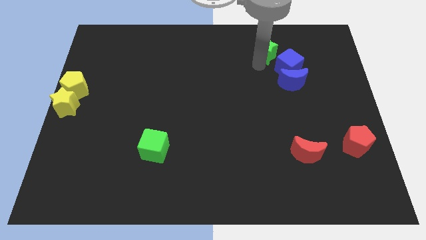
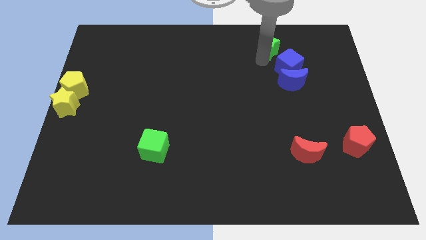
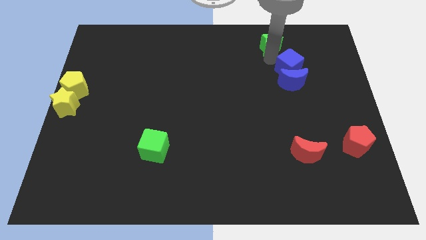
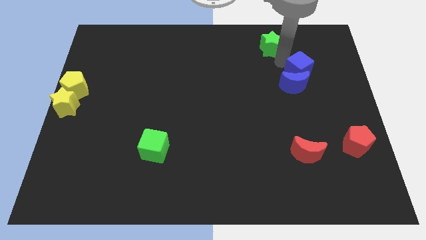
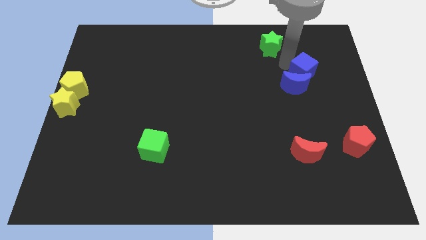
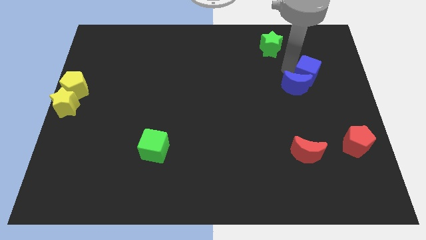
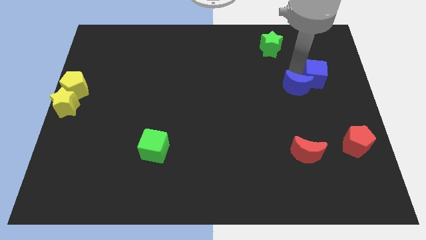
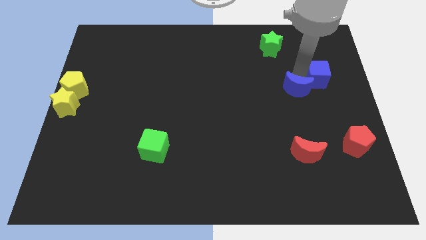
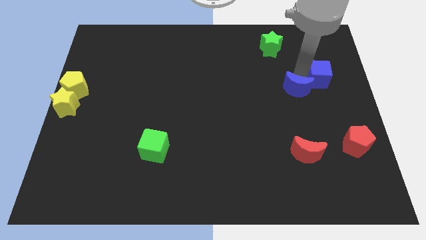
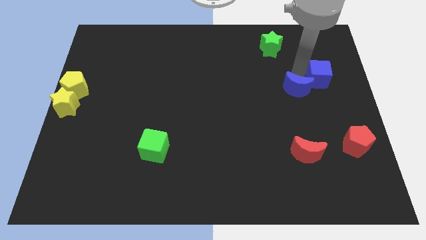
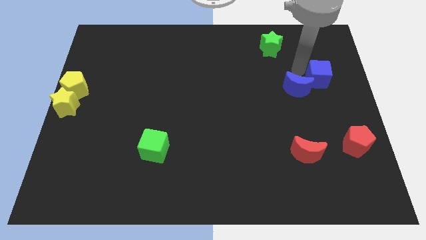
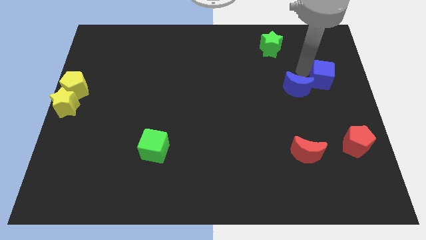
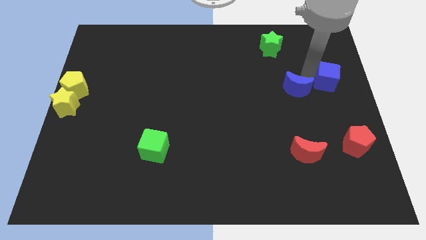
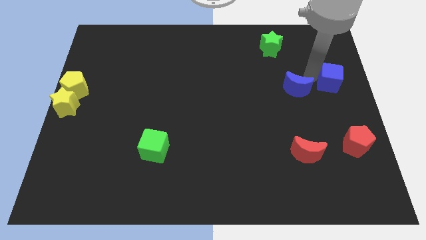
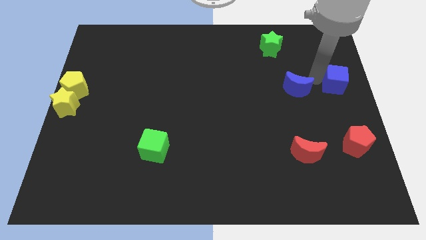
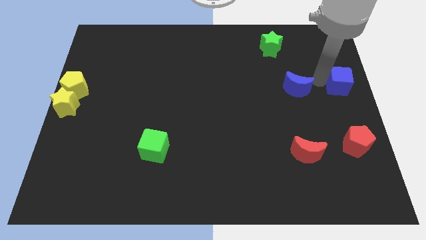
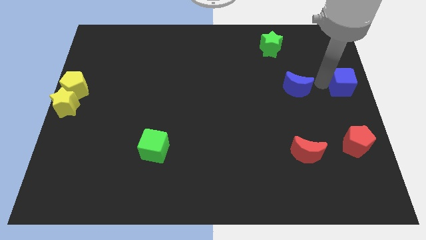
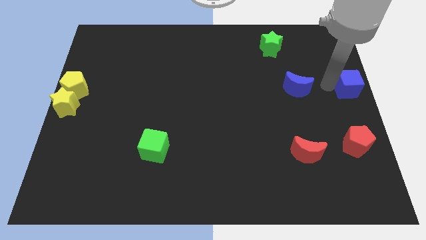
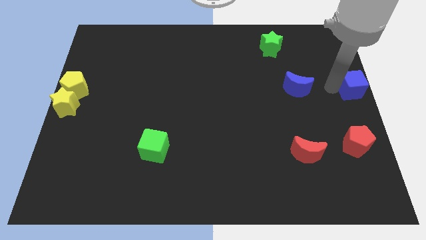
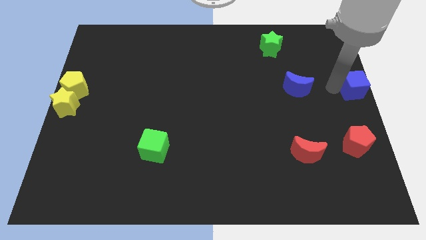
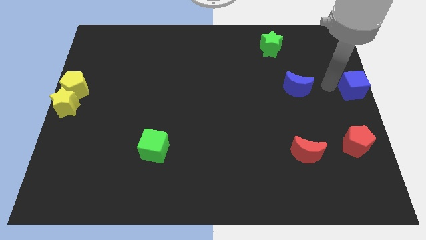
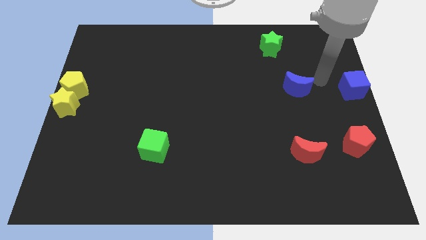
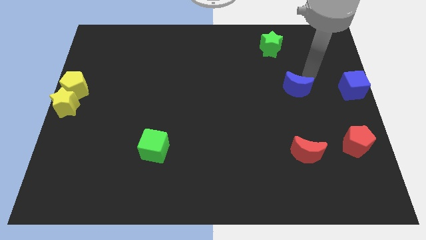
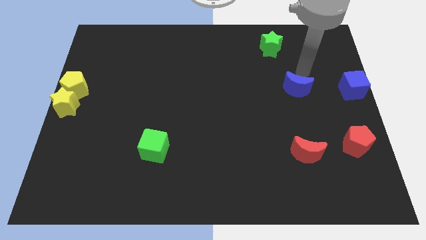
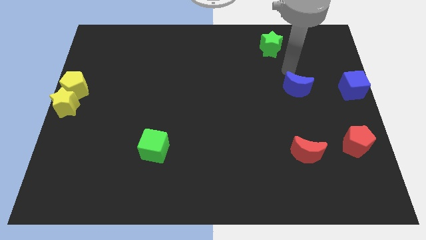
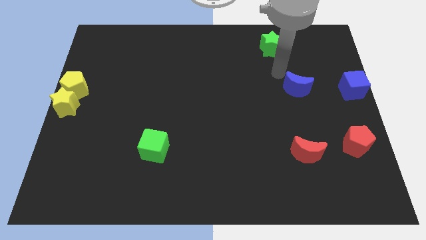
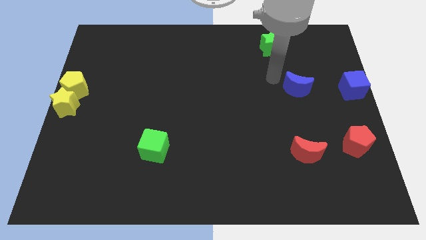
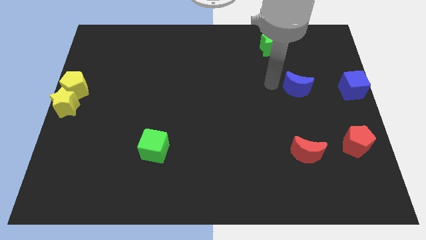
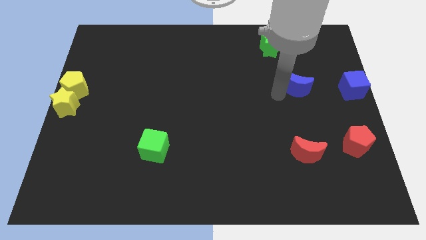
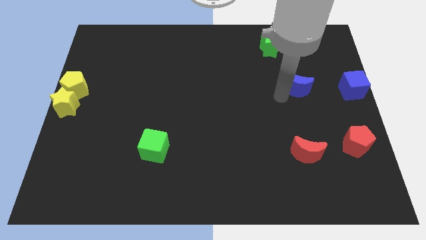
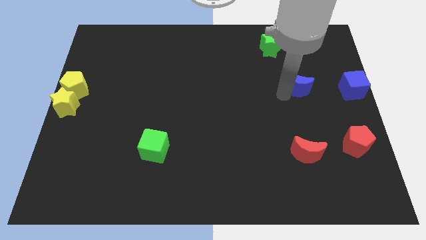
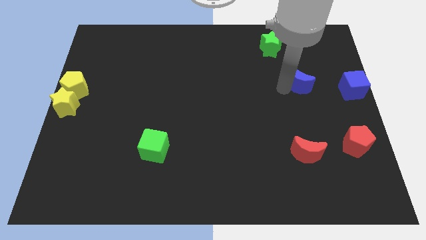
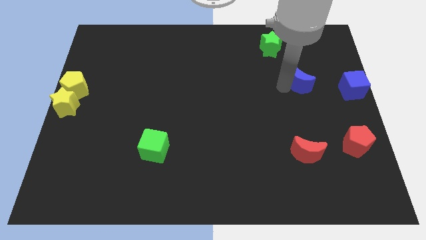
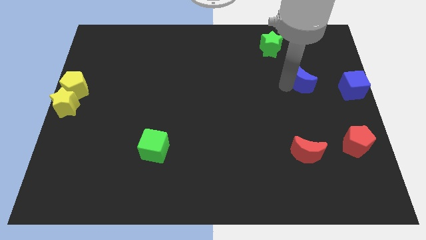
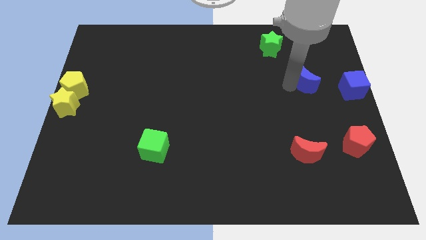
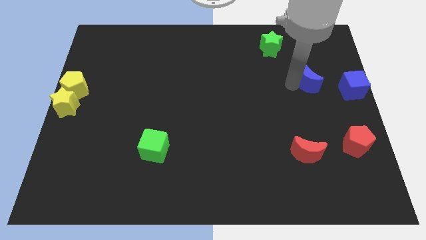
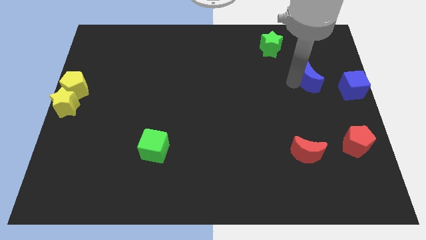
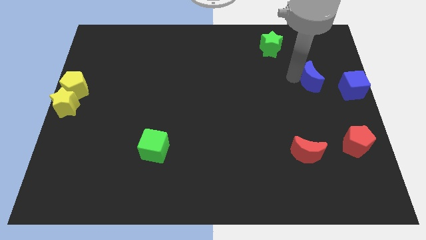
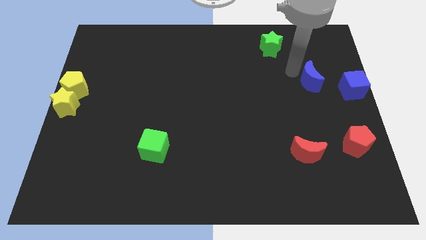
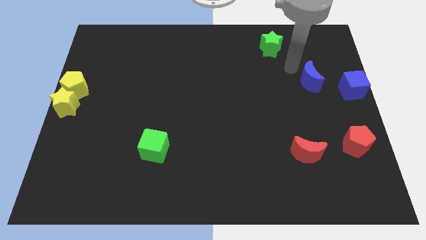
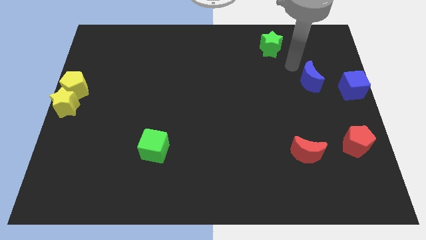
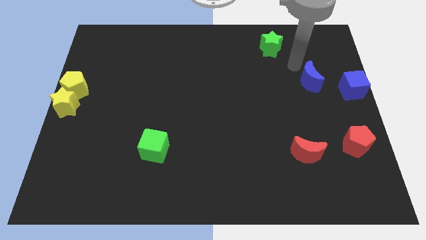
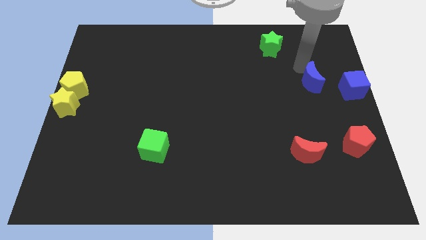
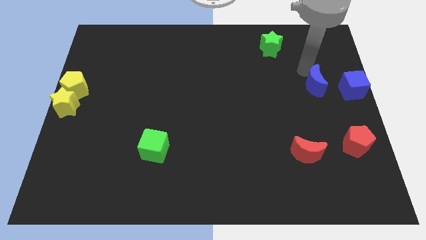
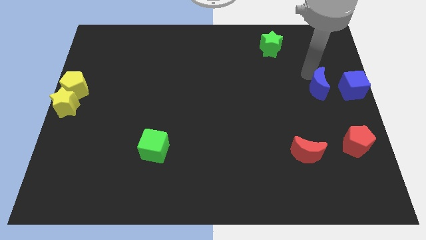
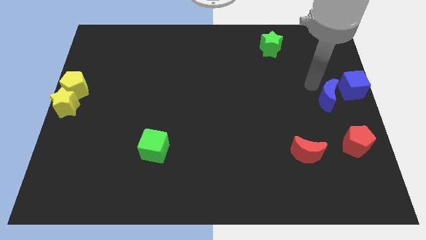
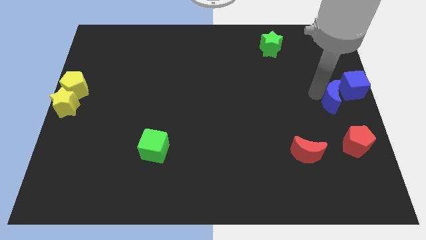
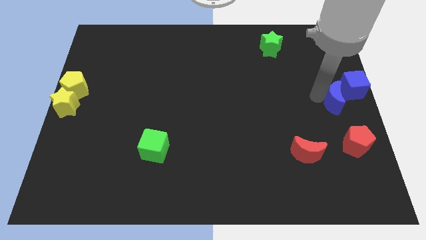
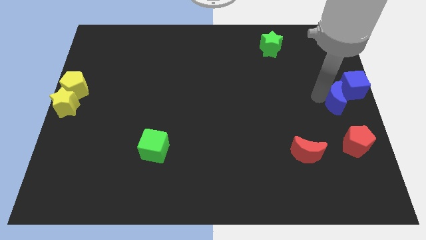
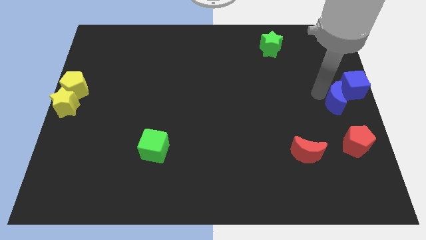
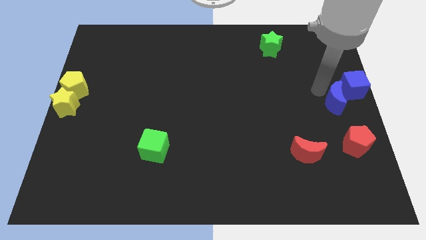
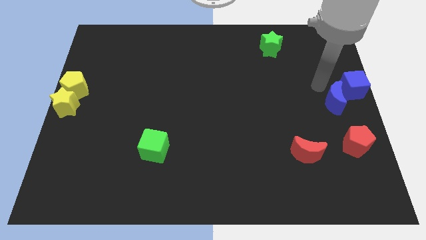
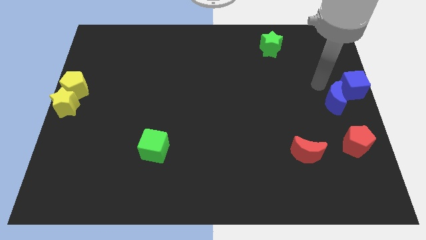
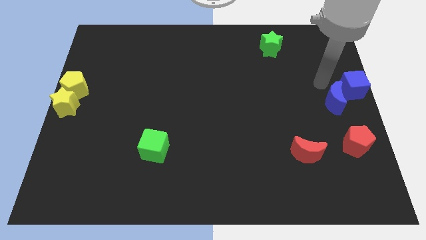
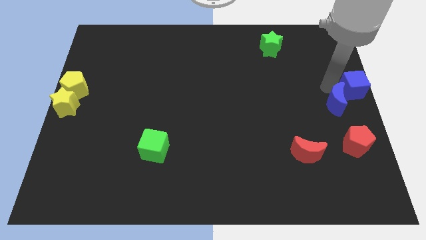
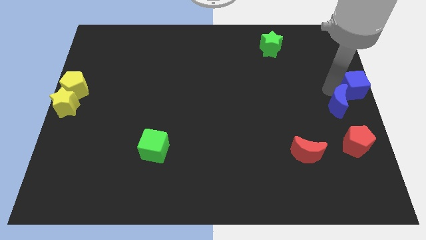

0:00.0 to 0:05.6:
push the blue blocks to the right center of the board

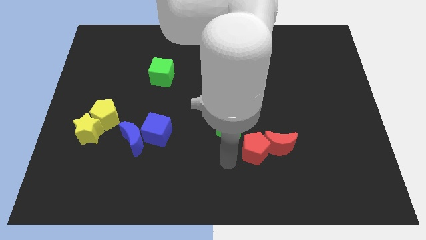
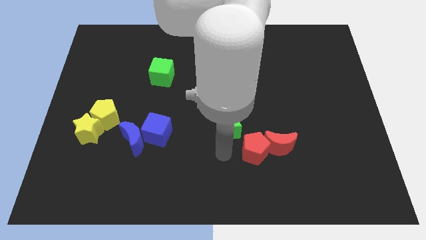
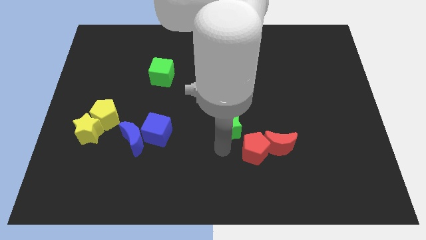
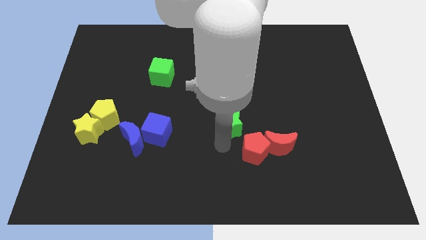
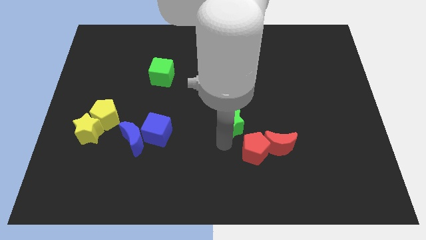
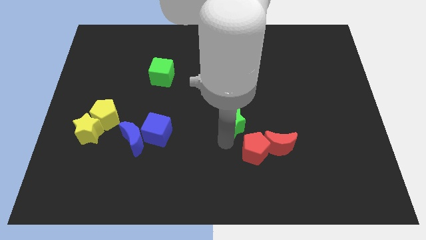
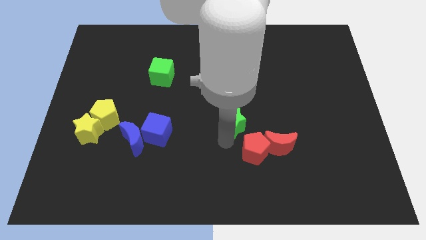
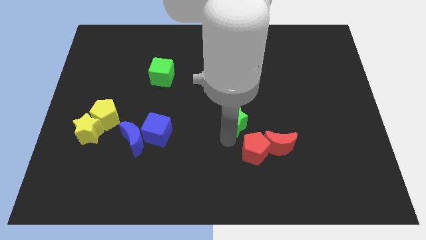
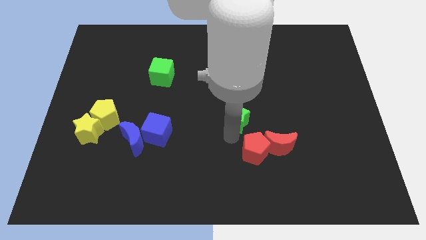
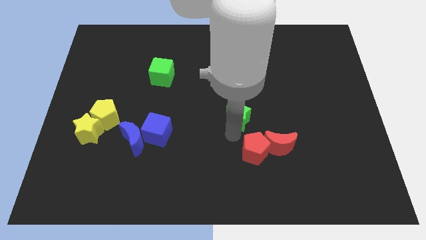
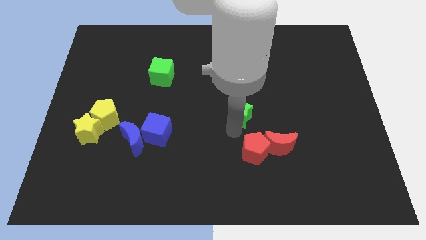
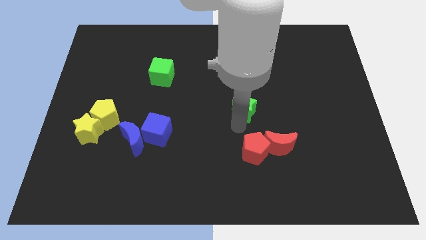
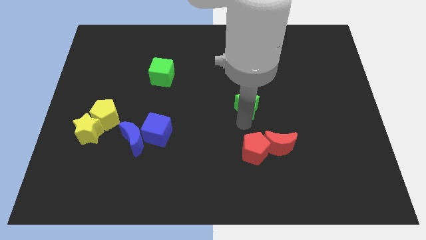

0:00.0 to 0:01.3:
slightly move the bottom of the green star

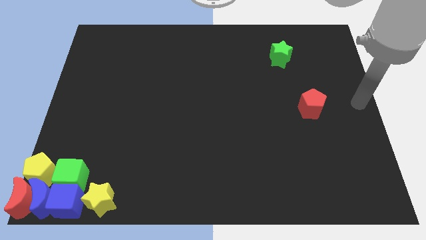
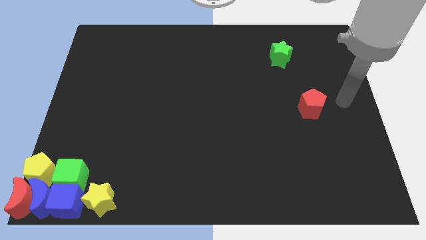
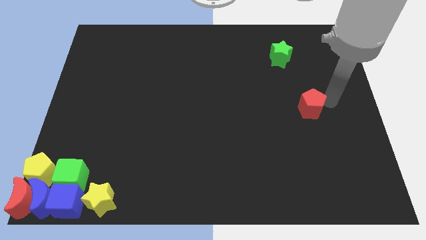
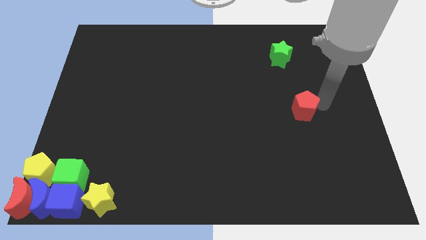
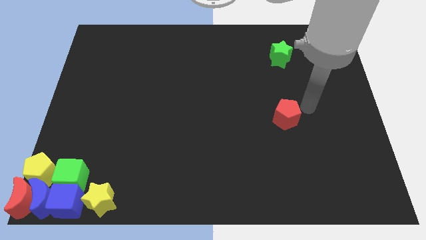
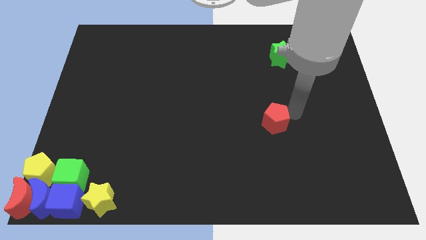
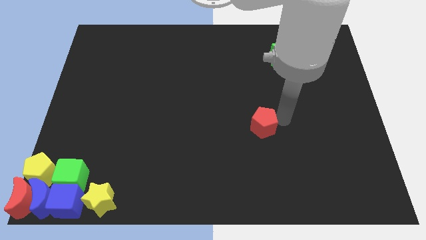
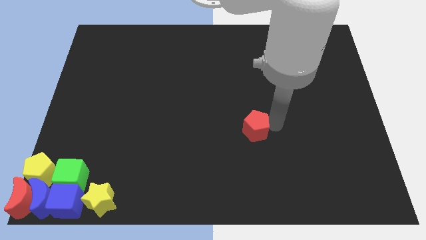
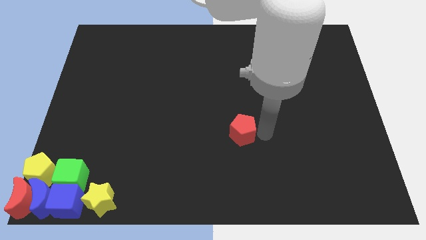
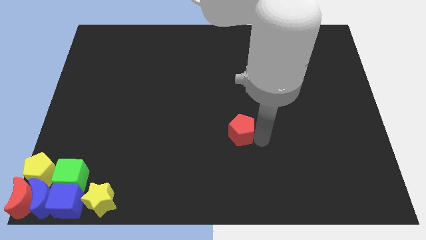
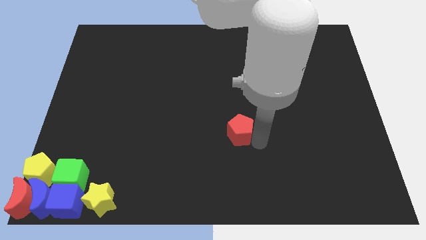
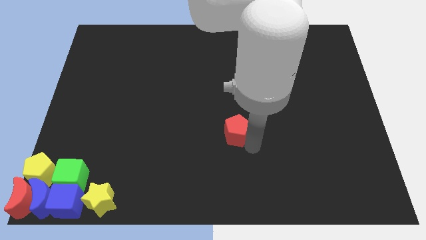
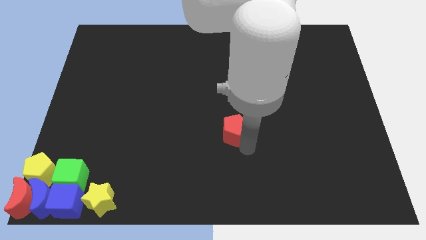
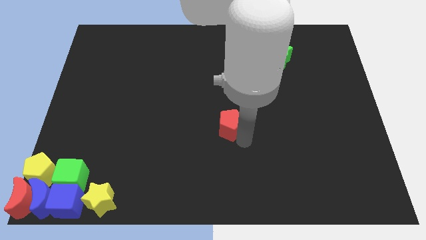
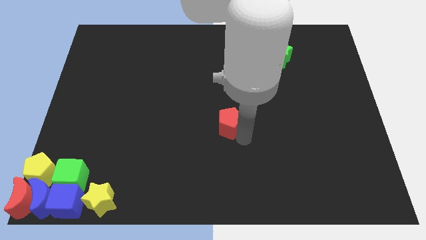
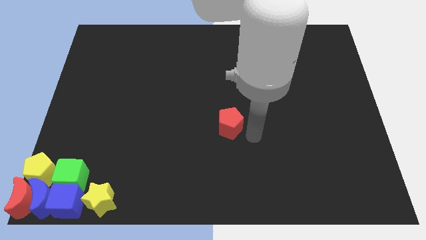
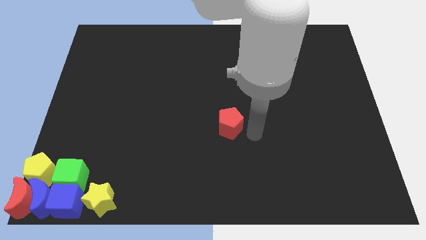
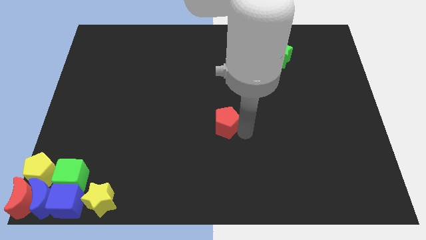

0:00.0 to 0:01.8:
push the red pentagon at the center of the board

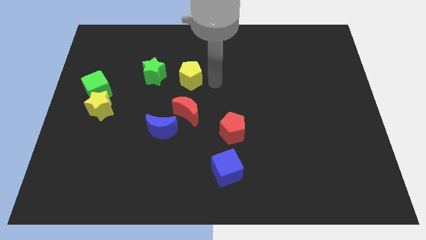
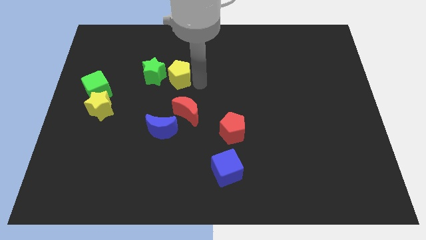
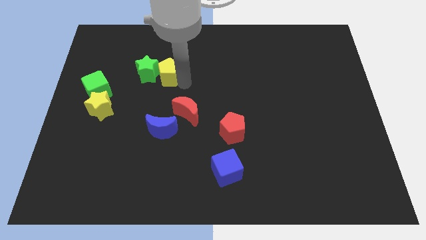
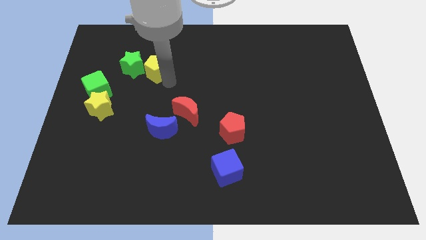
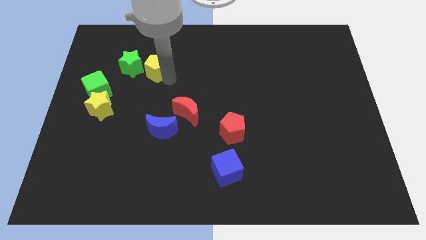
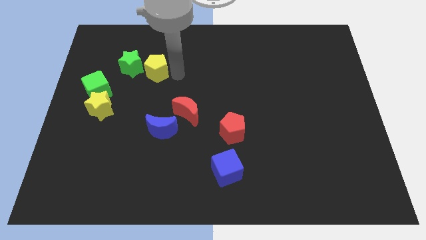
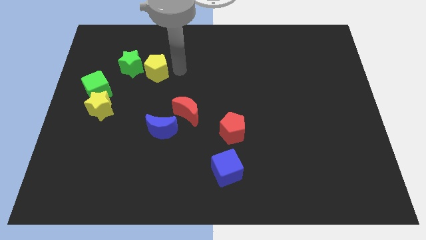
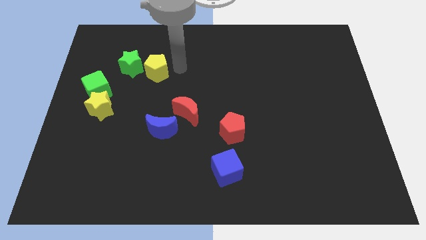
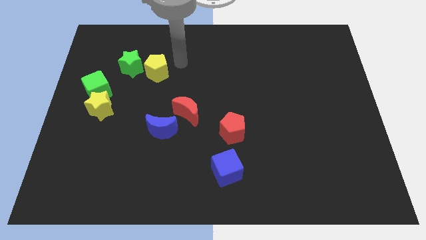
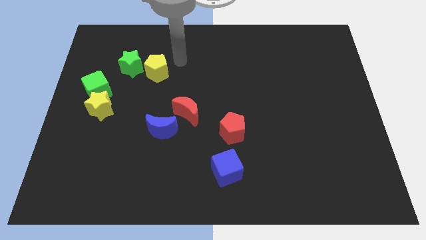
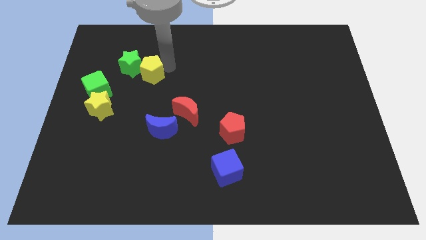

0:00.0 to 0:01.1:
move yellow pentagon along with green star towards top left
